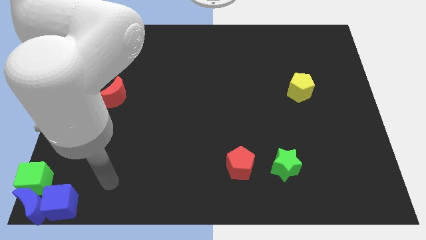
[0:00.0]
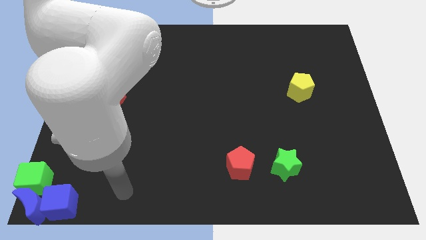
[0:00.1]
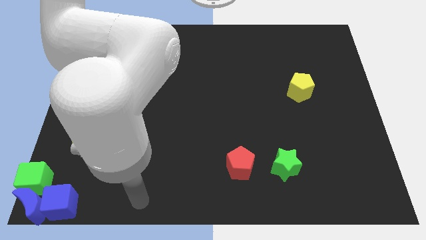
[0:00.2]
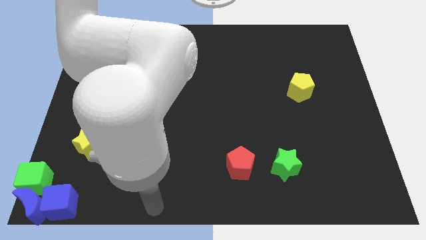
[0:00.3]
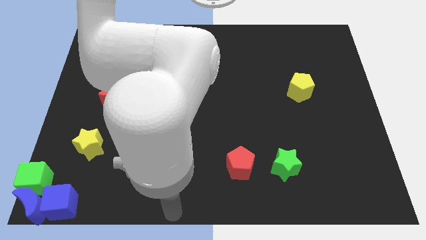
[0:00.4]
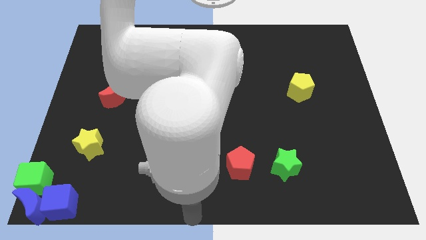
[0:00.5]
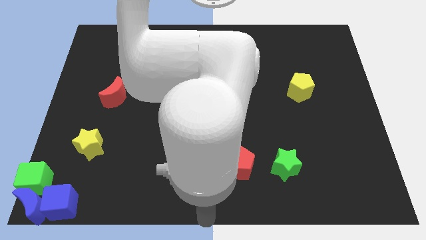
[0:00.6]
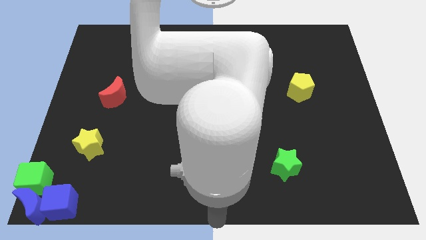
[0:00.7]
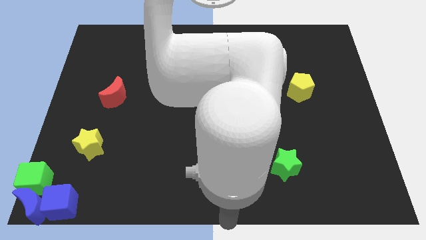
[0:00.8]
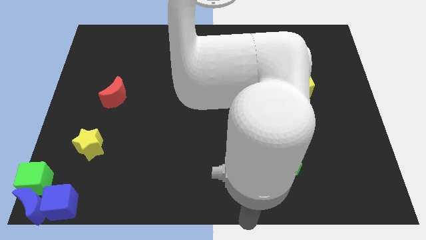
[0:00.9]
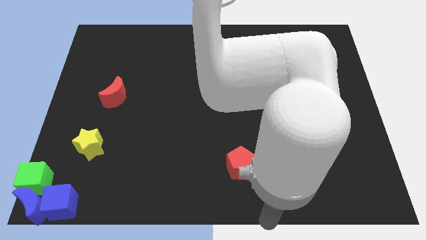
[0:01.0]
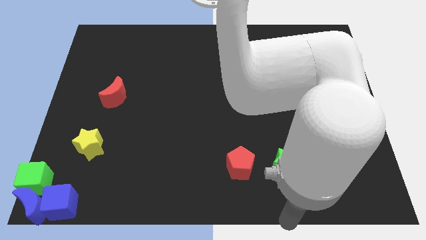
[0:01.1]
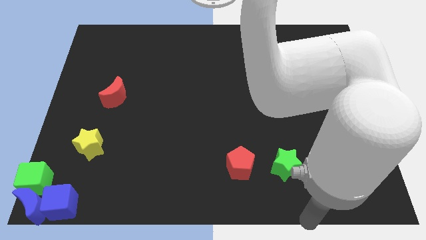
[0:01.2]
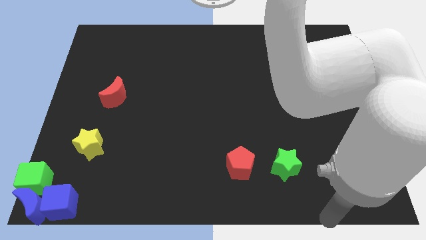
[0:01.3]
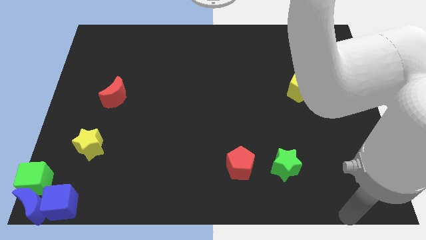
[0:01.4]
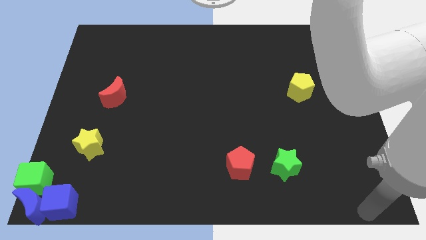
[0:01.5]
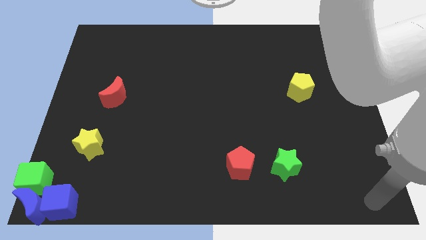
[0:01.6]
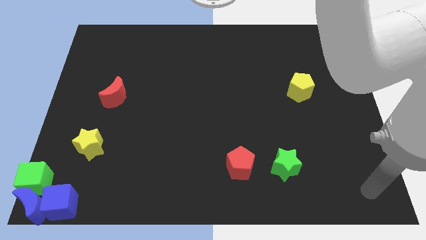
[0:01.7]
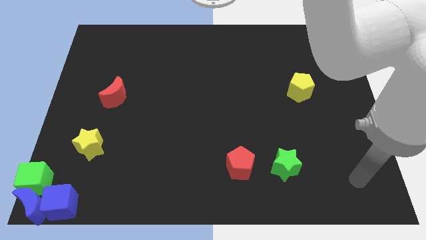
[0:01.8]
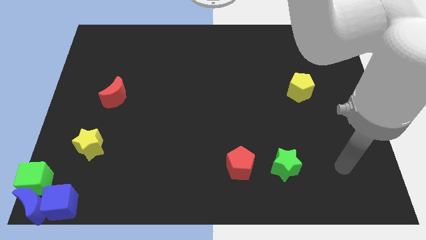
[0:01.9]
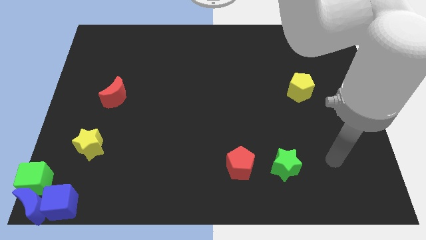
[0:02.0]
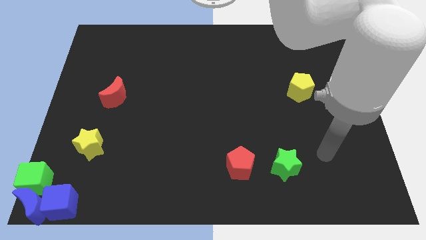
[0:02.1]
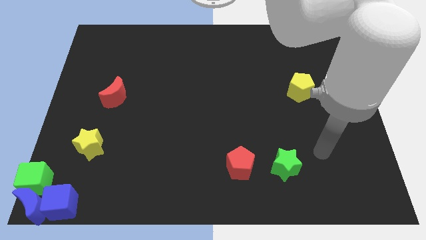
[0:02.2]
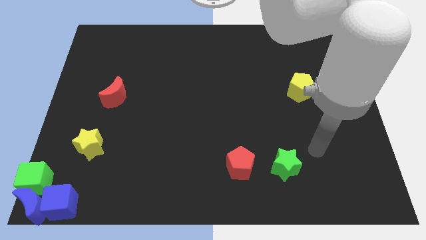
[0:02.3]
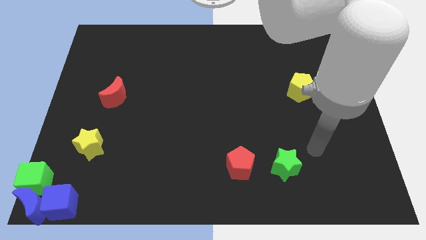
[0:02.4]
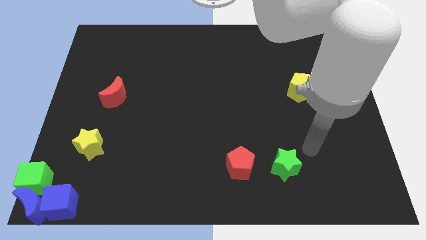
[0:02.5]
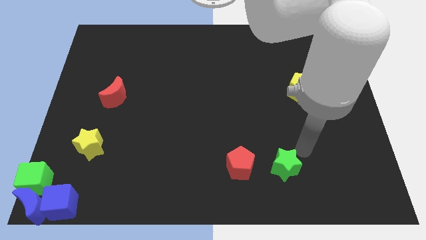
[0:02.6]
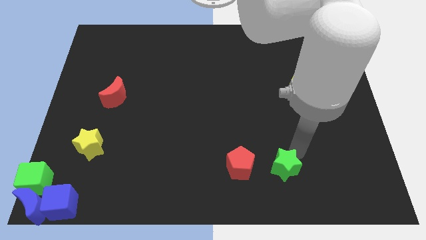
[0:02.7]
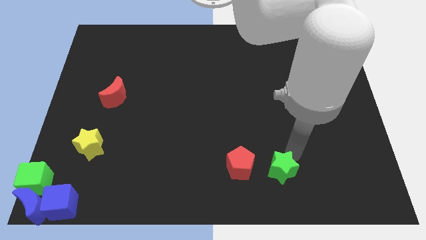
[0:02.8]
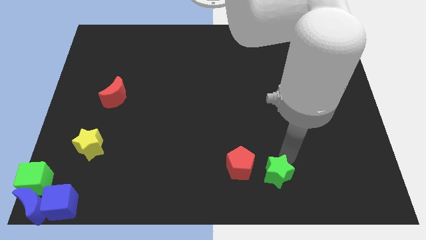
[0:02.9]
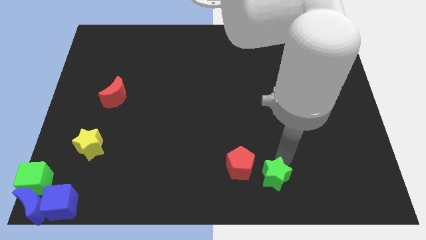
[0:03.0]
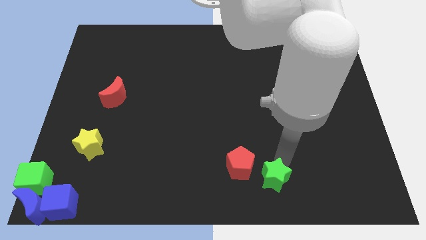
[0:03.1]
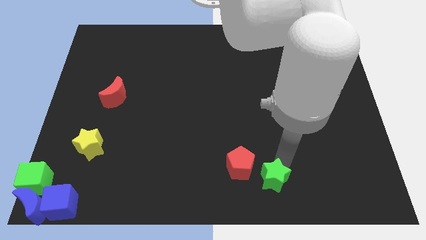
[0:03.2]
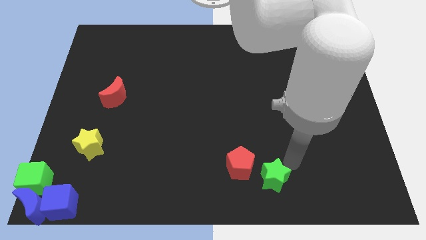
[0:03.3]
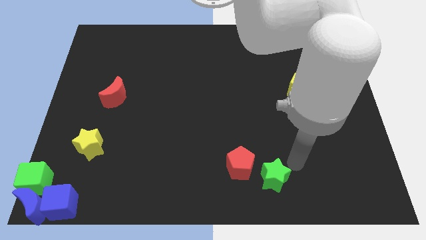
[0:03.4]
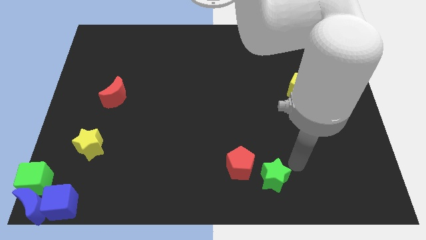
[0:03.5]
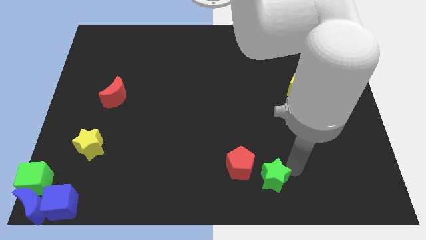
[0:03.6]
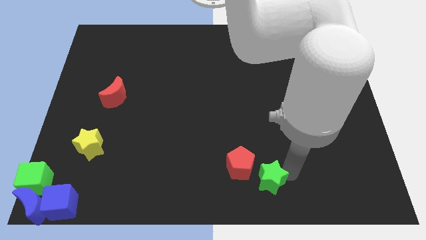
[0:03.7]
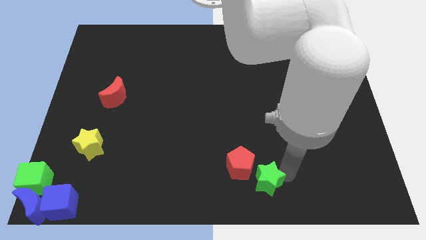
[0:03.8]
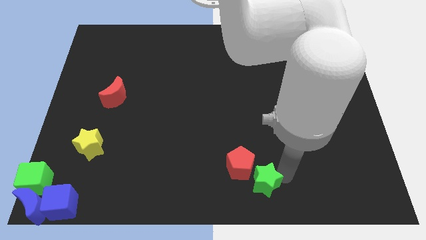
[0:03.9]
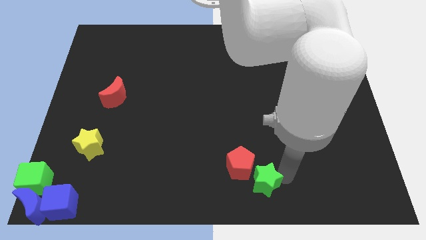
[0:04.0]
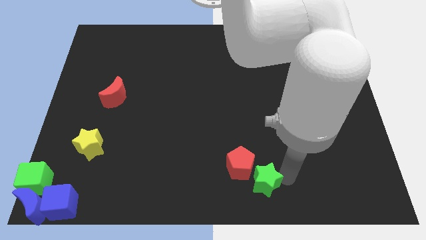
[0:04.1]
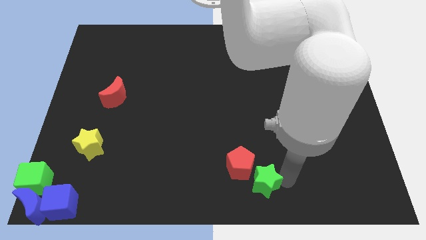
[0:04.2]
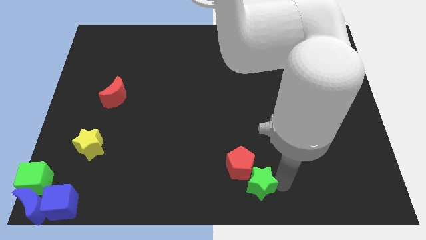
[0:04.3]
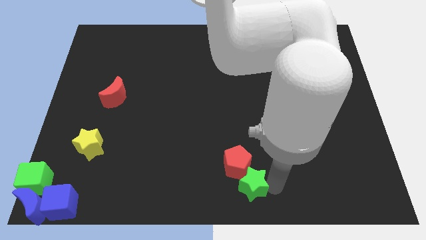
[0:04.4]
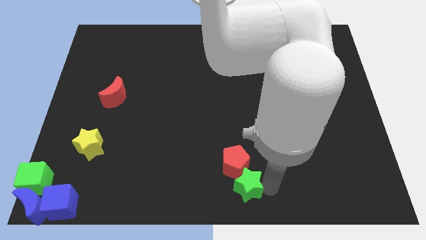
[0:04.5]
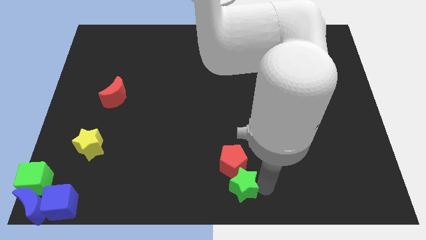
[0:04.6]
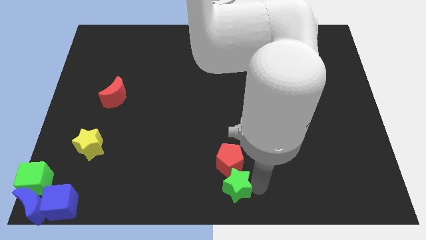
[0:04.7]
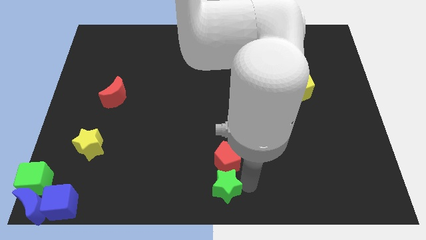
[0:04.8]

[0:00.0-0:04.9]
push the green star below the red pentagon

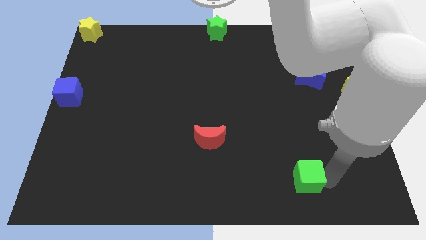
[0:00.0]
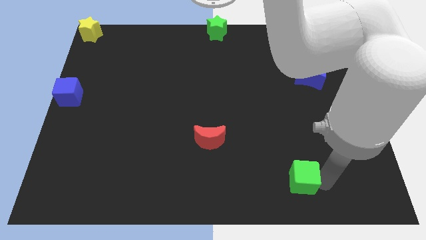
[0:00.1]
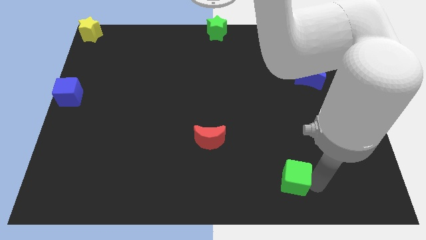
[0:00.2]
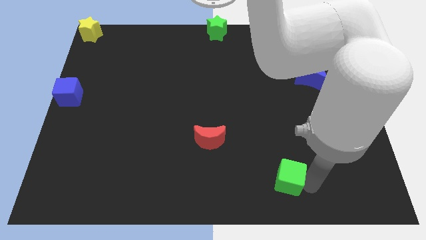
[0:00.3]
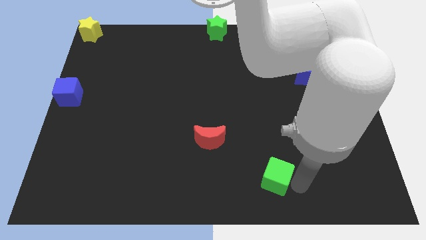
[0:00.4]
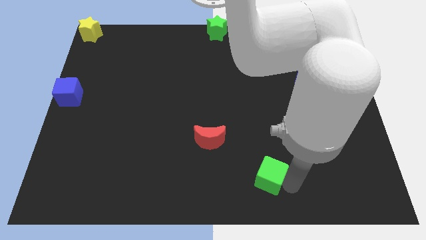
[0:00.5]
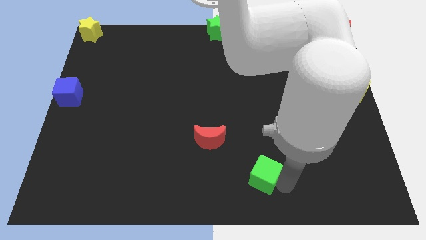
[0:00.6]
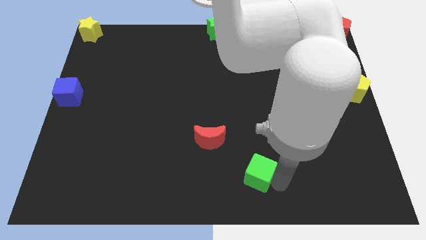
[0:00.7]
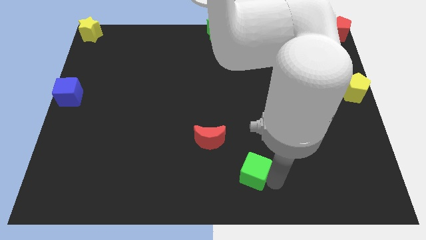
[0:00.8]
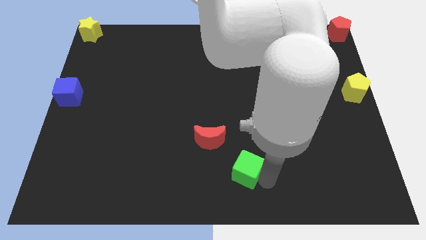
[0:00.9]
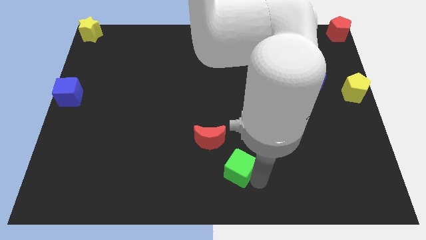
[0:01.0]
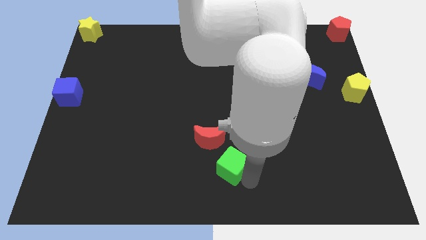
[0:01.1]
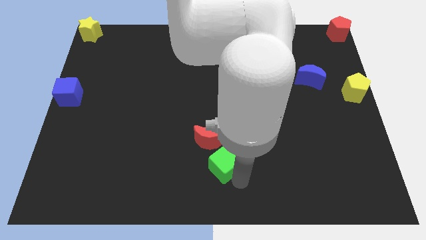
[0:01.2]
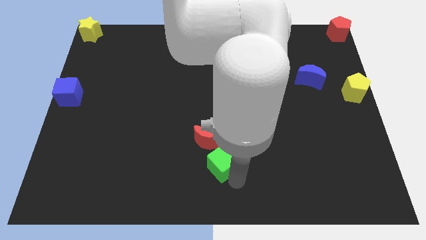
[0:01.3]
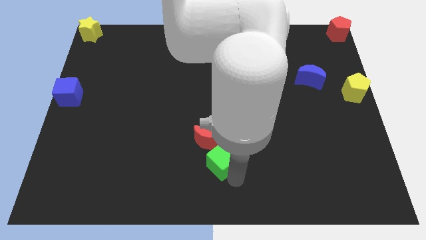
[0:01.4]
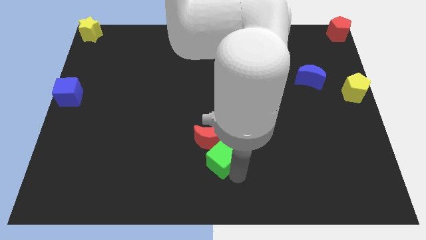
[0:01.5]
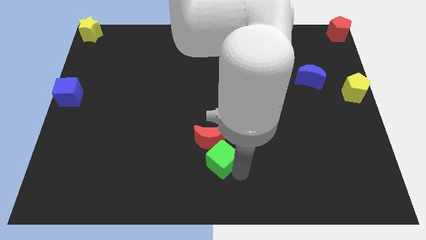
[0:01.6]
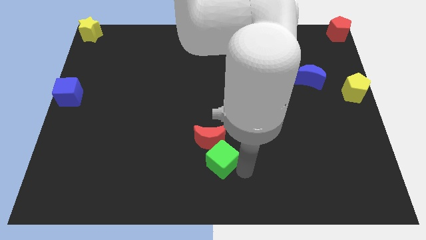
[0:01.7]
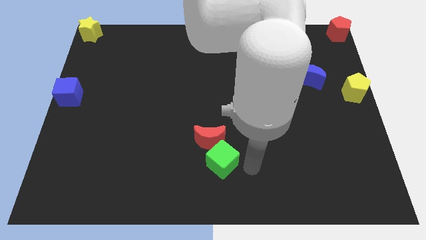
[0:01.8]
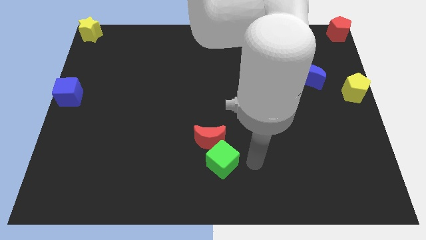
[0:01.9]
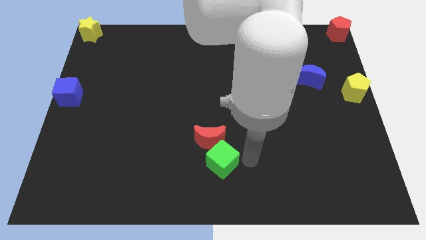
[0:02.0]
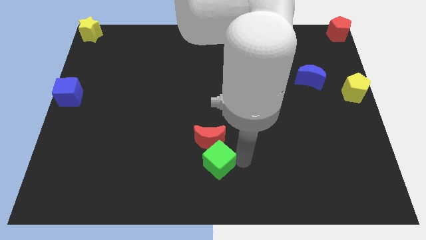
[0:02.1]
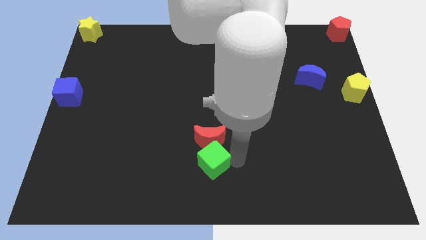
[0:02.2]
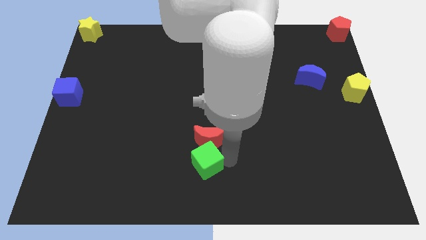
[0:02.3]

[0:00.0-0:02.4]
place the green cube below the red crescent

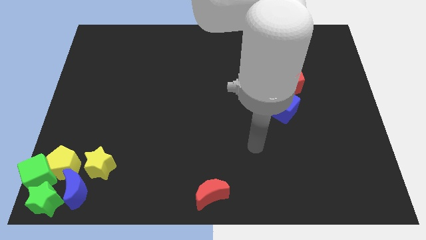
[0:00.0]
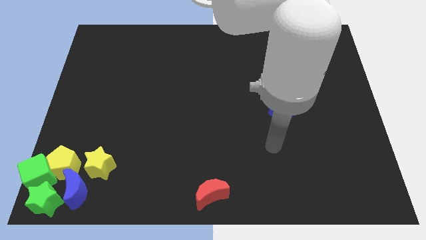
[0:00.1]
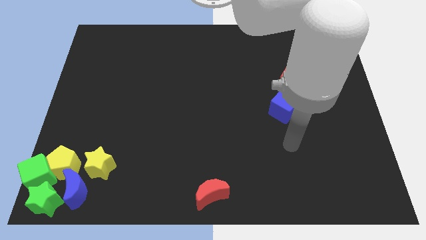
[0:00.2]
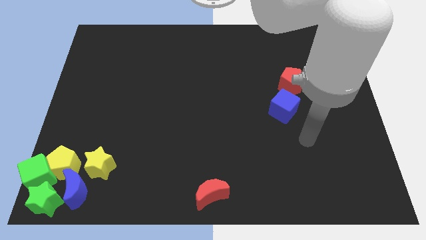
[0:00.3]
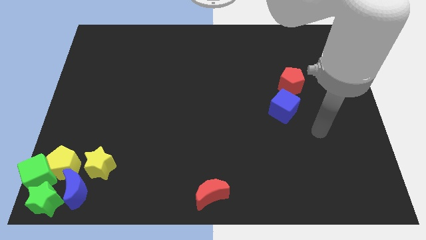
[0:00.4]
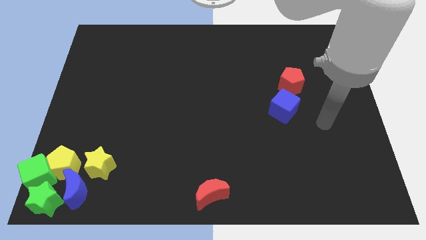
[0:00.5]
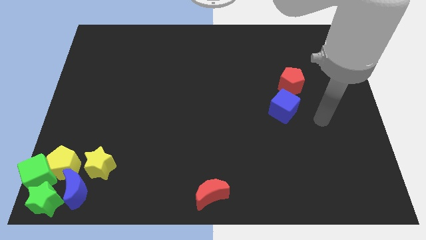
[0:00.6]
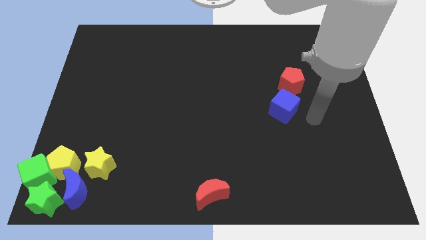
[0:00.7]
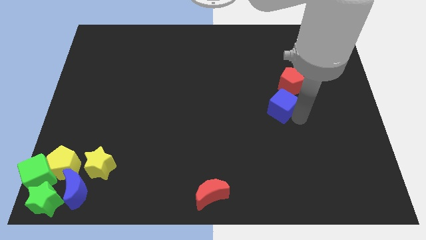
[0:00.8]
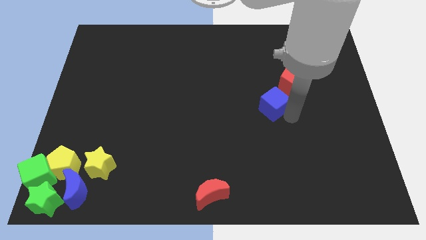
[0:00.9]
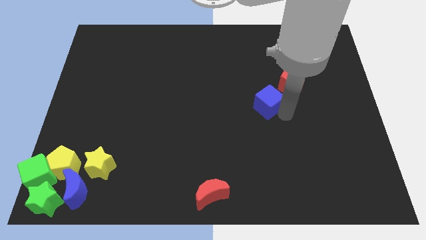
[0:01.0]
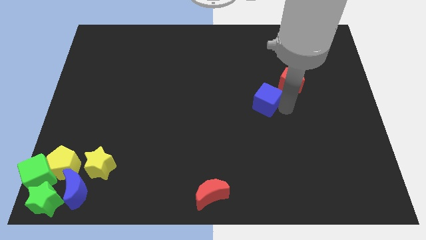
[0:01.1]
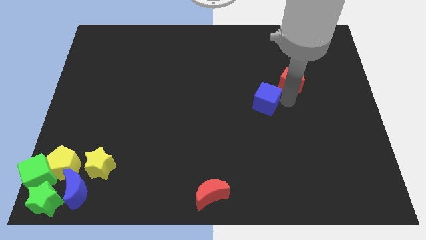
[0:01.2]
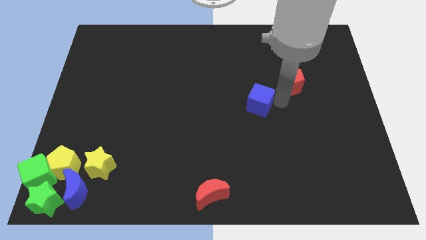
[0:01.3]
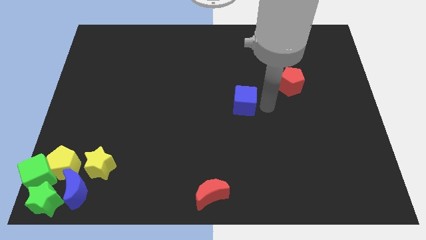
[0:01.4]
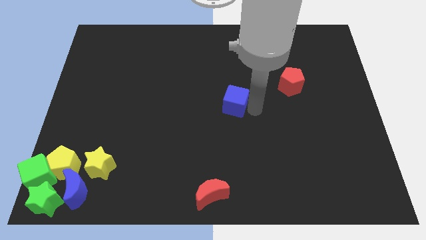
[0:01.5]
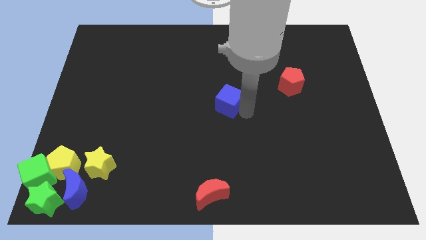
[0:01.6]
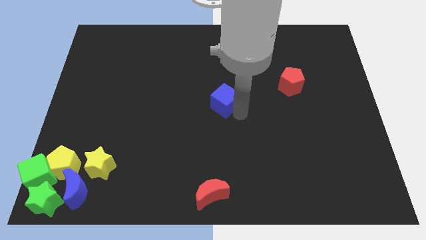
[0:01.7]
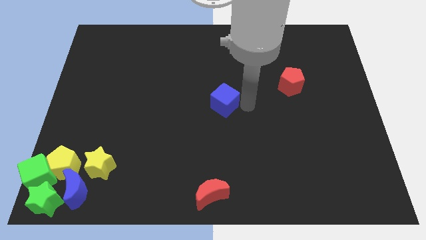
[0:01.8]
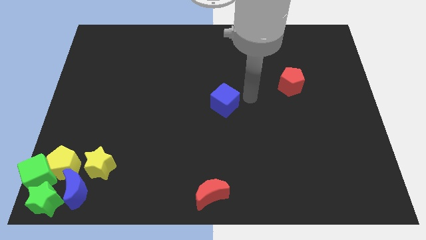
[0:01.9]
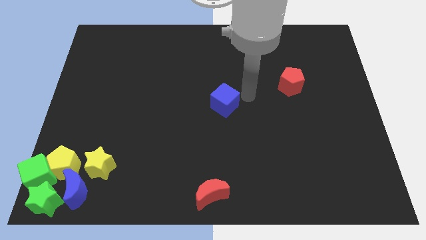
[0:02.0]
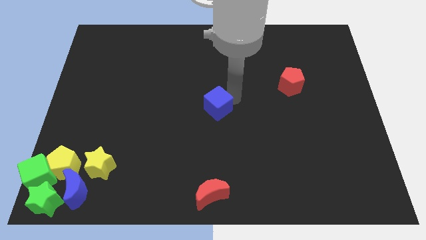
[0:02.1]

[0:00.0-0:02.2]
place the blue cube at the center of the board
